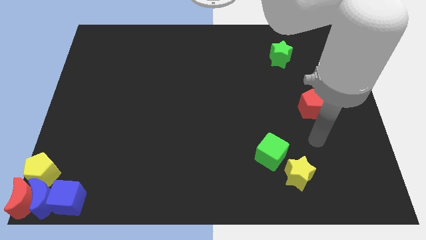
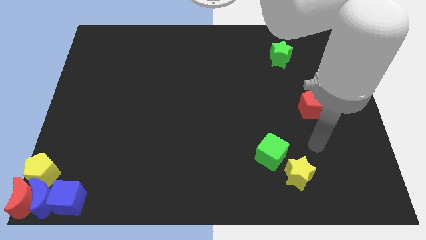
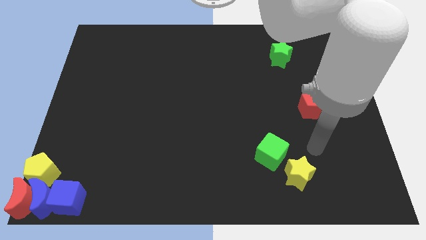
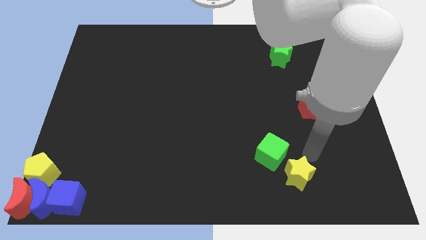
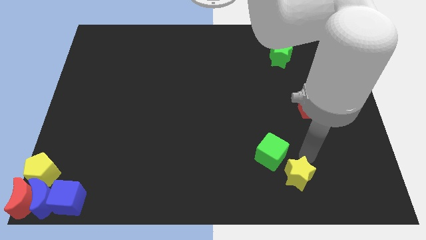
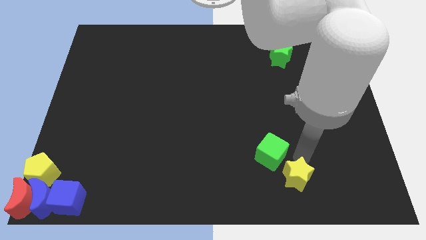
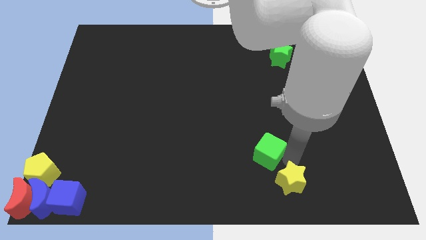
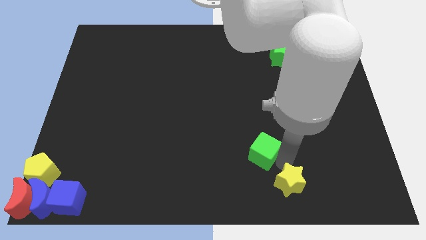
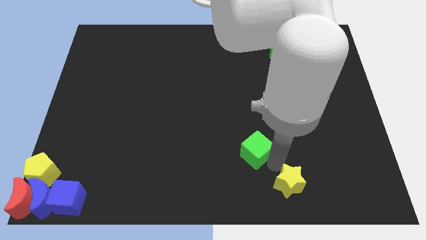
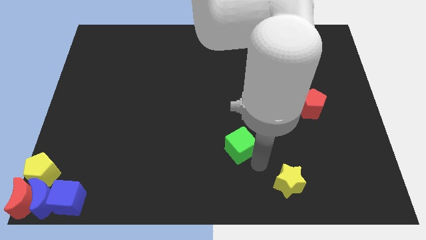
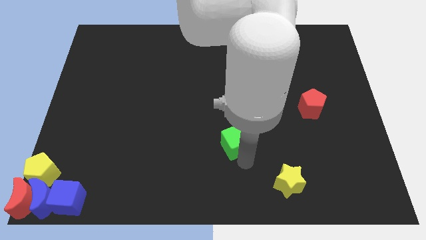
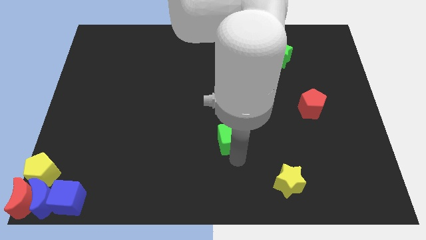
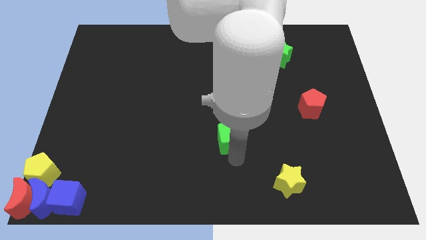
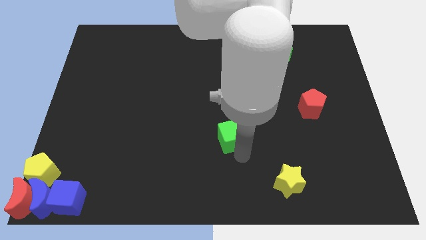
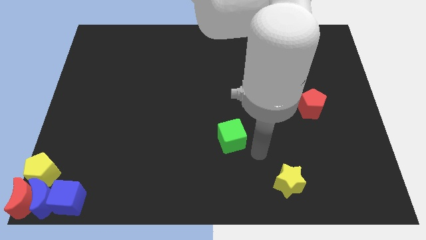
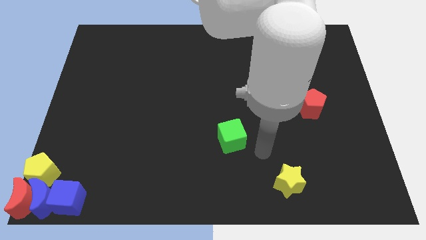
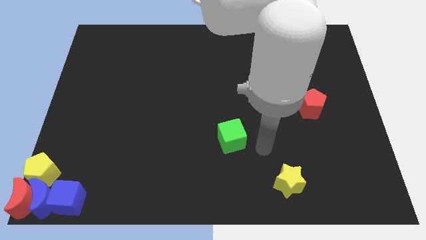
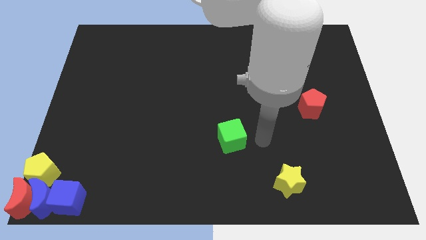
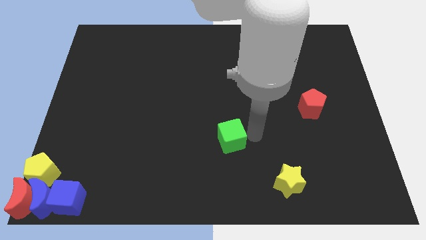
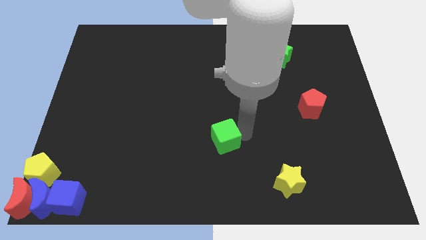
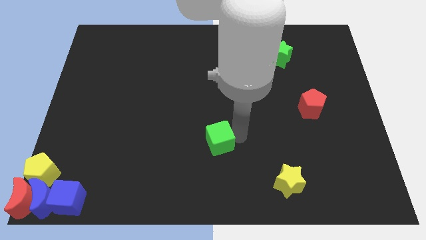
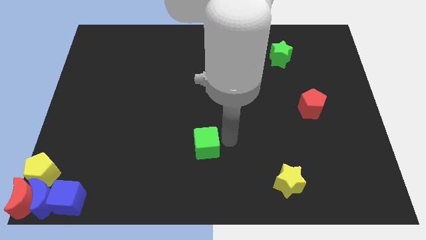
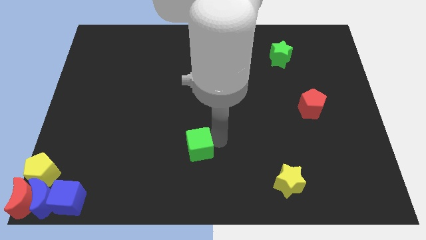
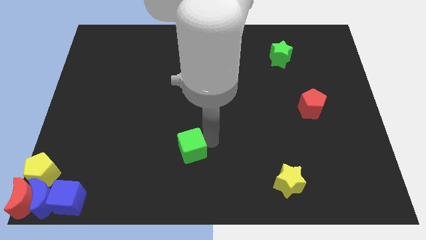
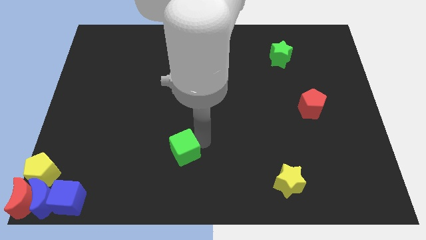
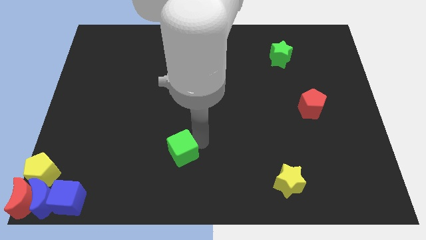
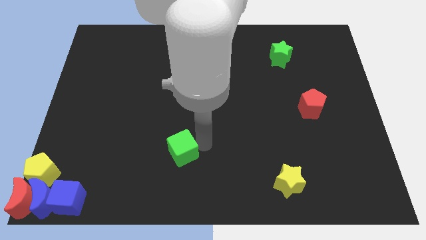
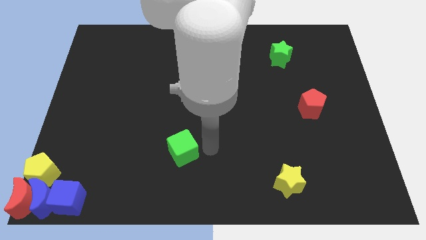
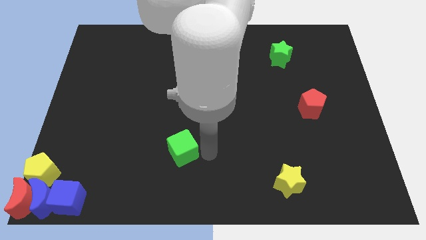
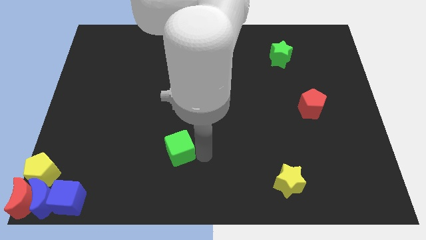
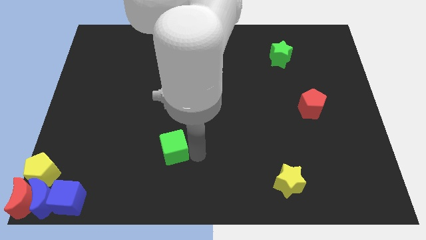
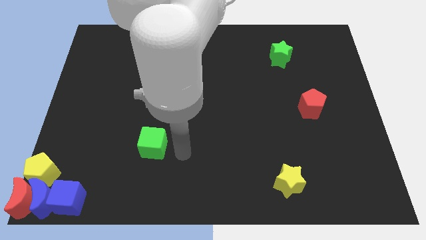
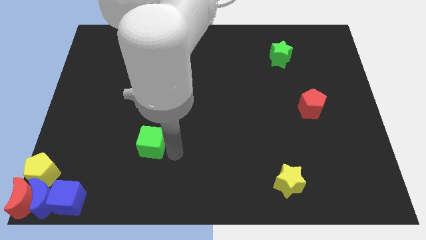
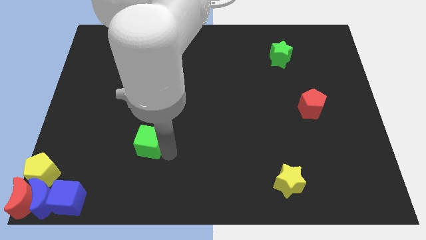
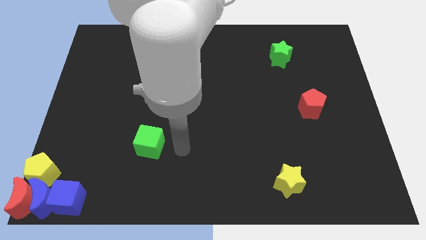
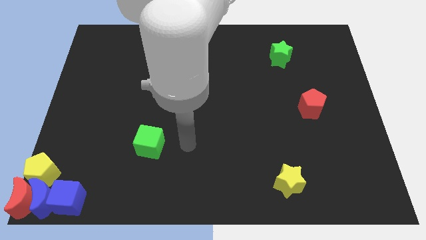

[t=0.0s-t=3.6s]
move the green cube away from the yellow star

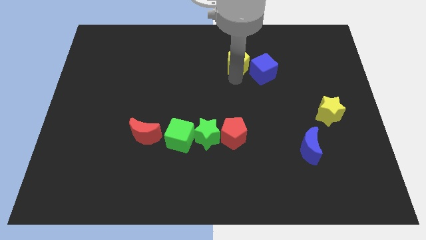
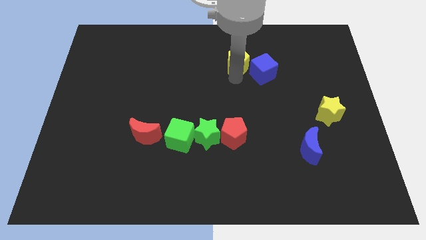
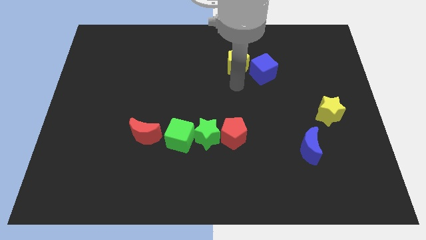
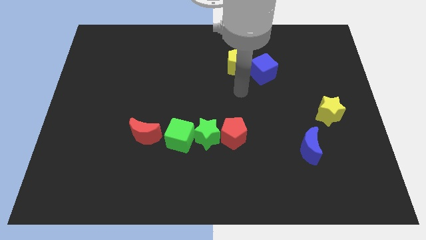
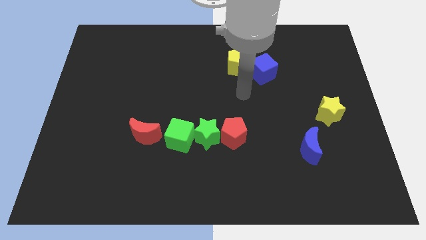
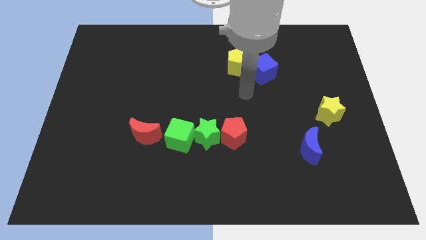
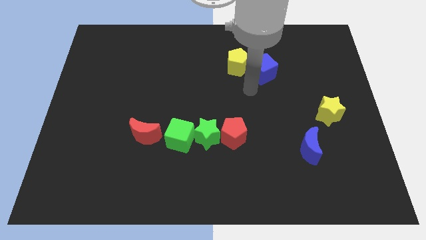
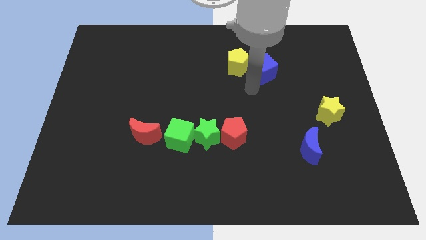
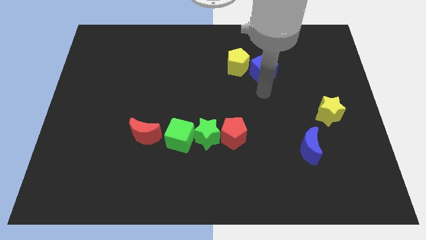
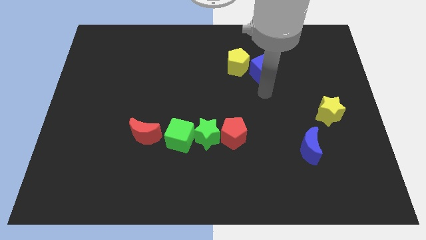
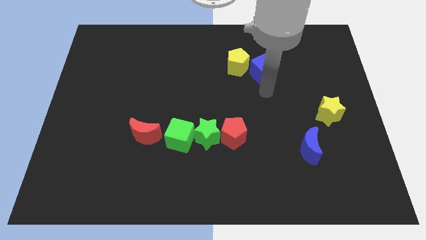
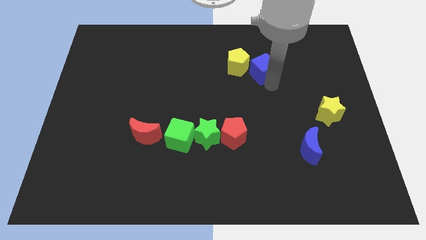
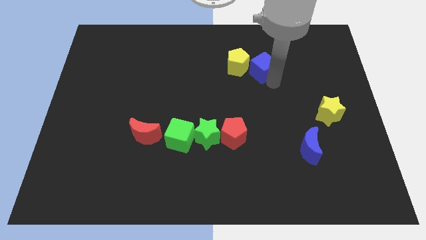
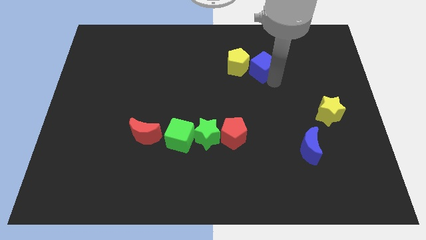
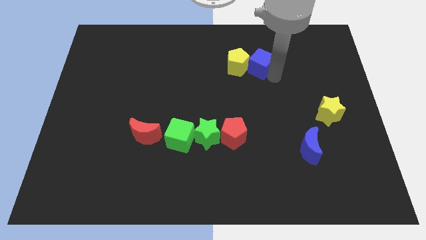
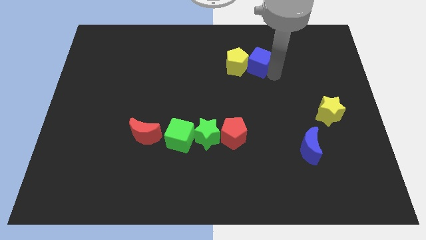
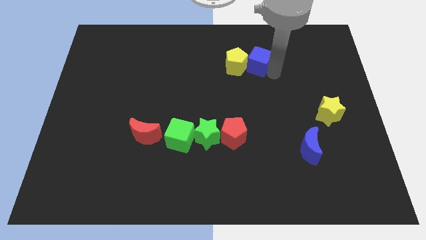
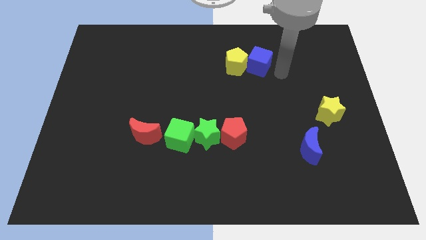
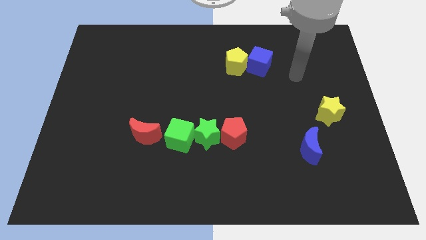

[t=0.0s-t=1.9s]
place the yellow pentagon along with blue cube to the top

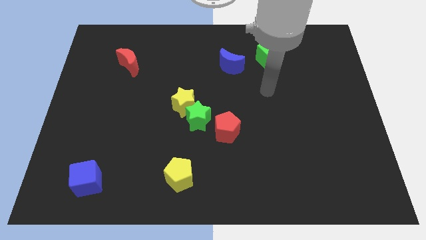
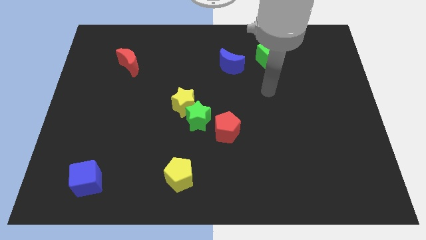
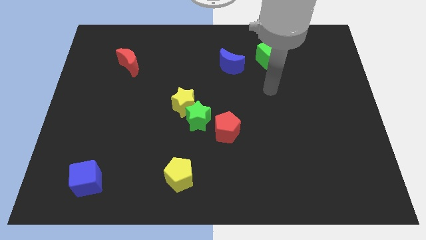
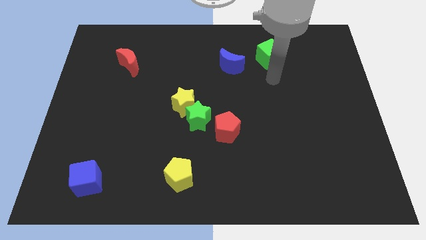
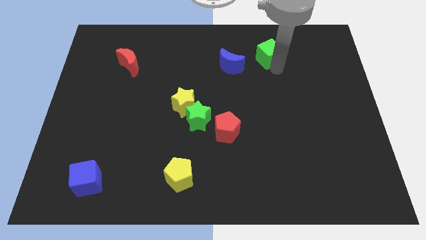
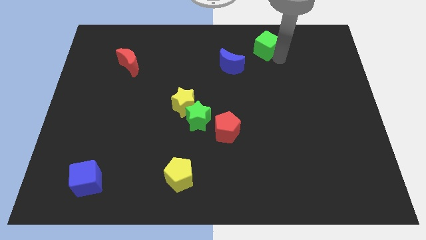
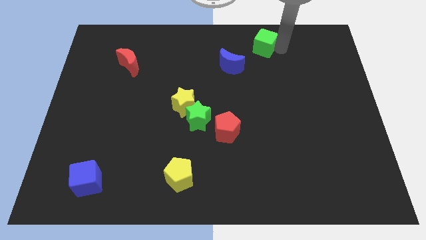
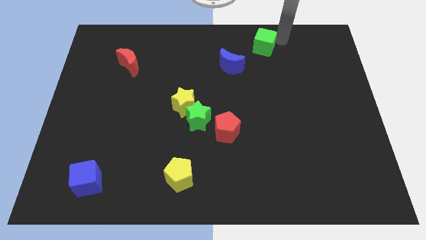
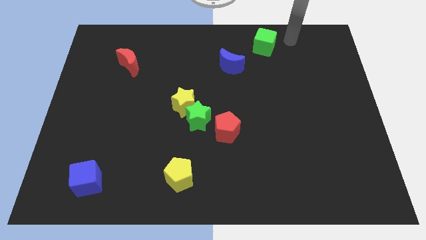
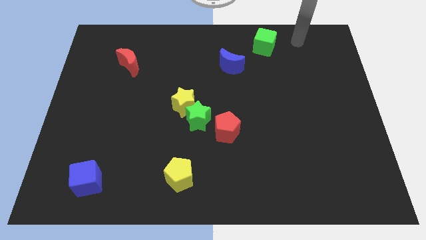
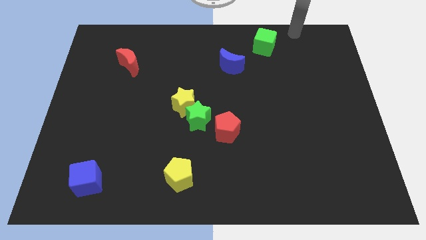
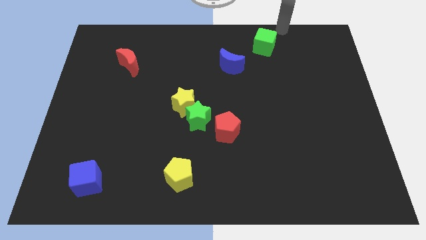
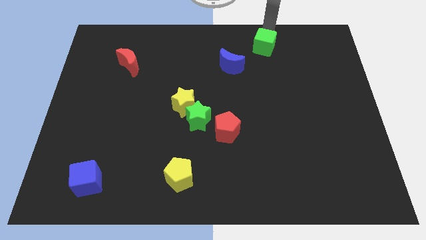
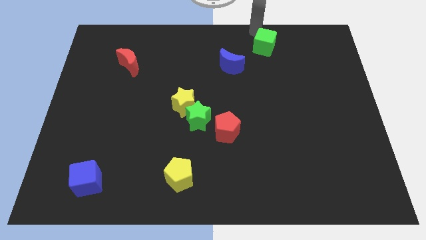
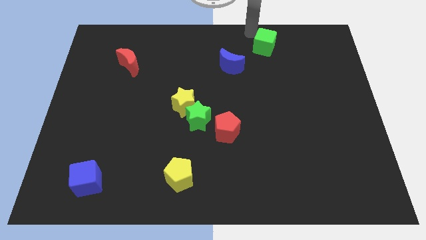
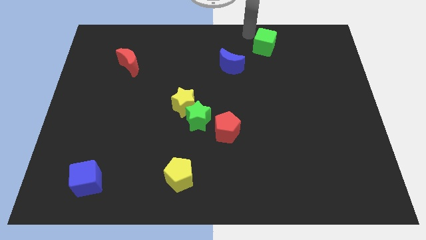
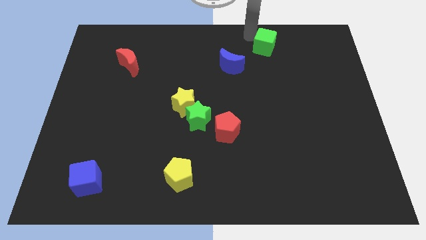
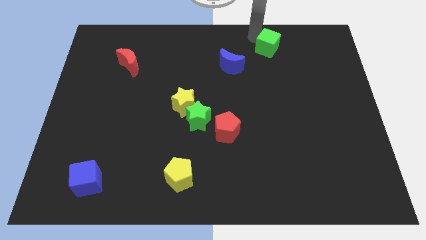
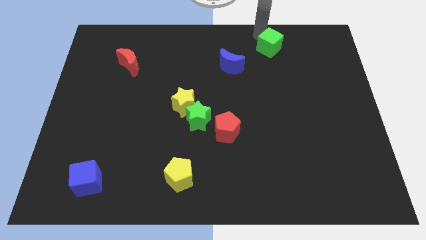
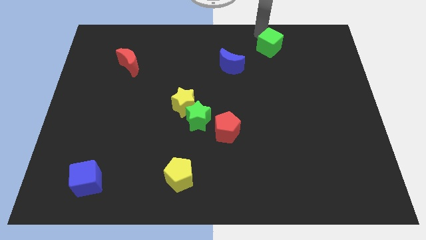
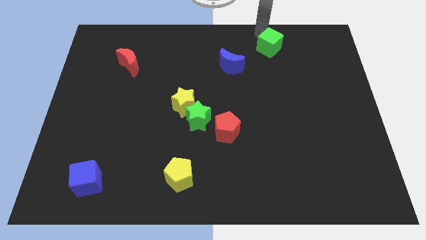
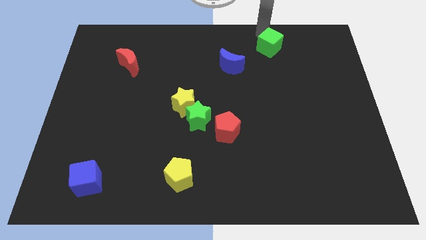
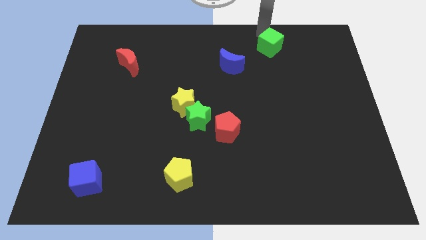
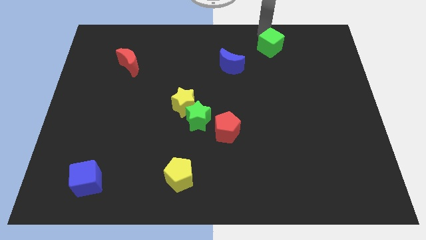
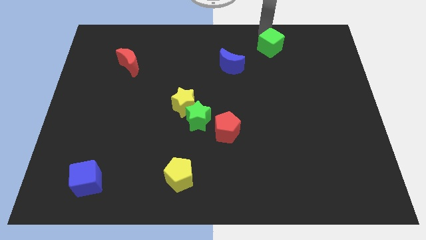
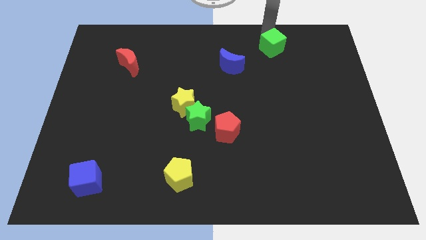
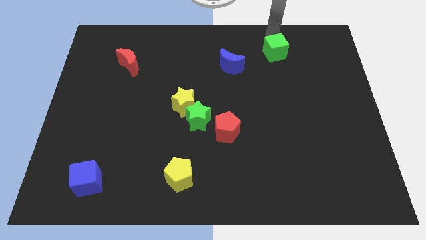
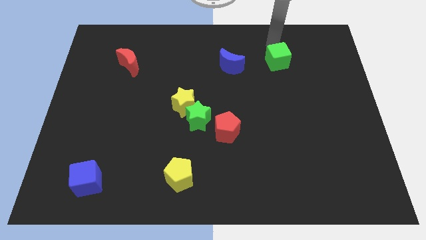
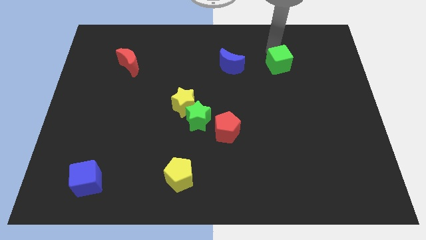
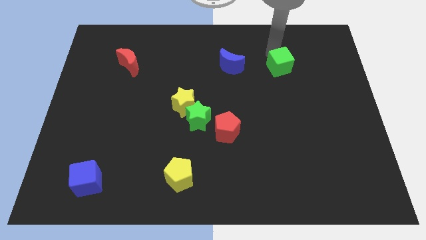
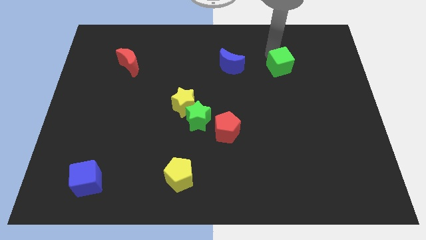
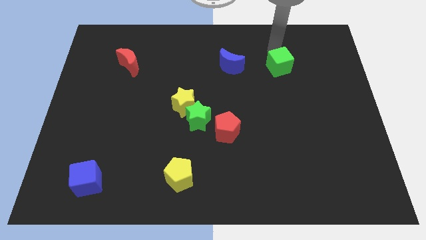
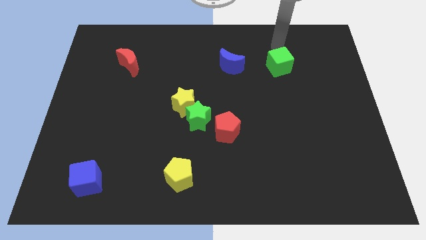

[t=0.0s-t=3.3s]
move green cube slightly downwards
